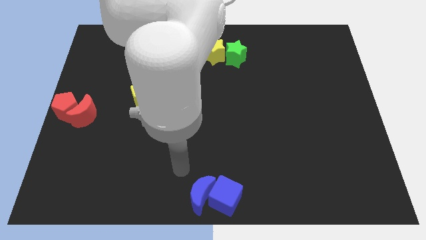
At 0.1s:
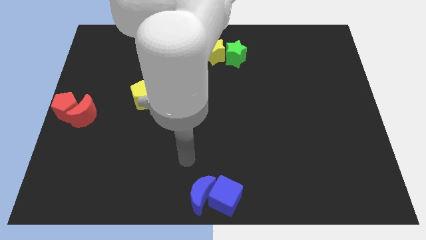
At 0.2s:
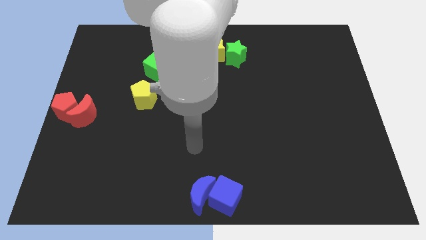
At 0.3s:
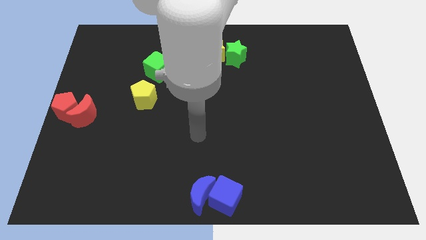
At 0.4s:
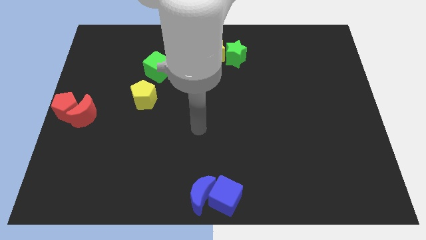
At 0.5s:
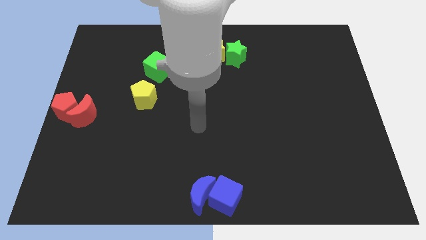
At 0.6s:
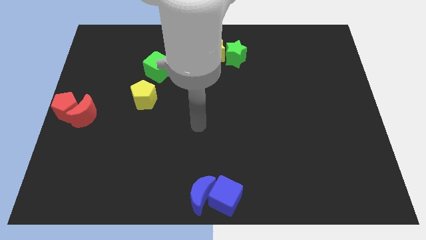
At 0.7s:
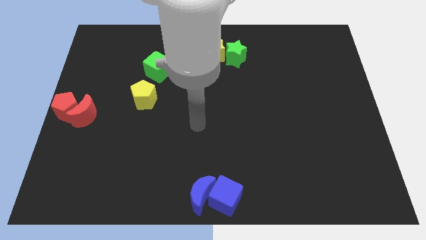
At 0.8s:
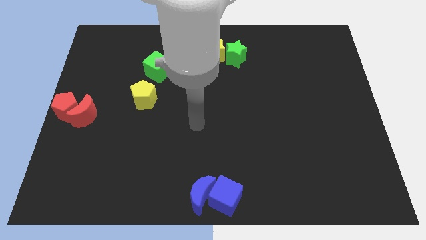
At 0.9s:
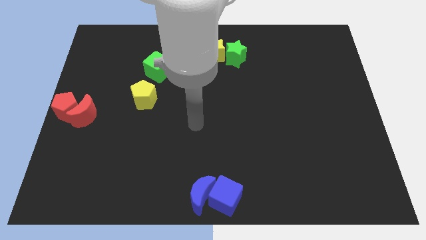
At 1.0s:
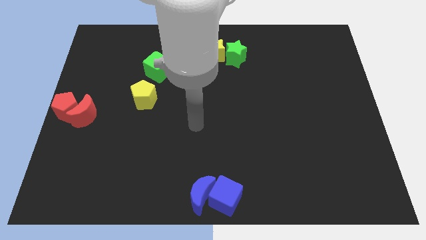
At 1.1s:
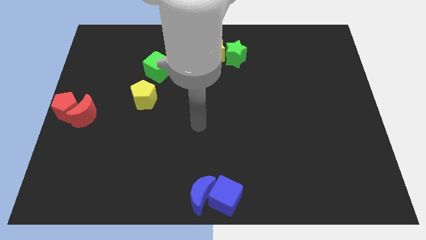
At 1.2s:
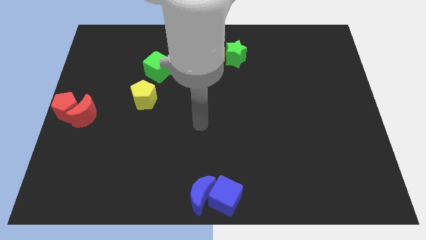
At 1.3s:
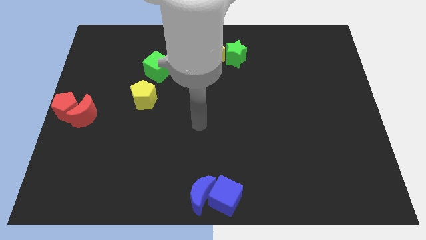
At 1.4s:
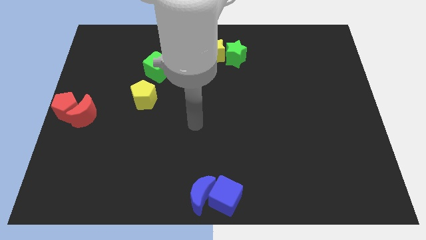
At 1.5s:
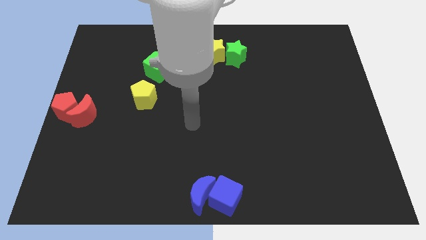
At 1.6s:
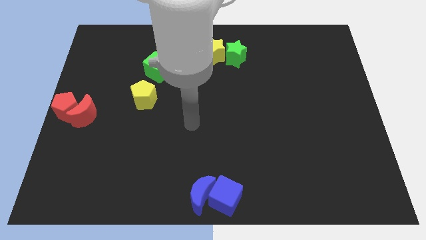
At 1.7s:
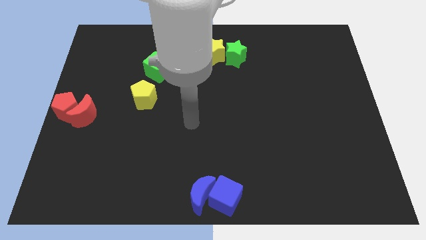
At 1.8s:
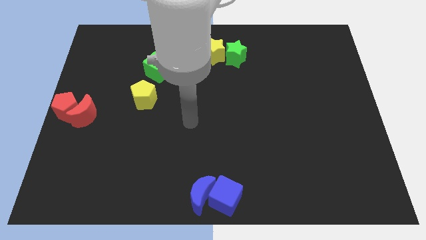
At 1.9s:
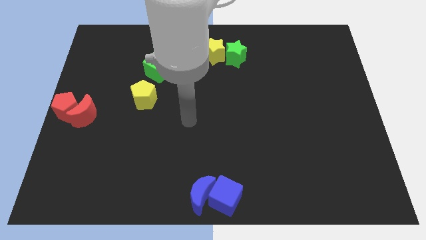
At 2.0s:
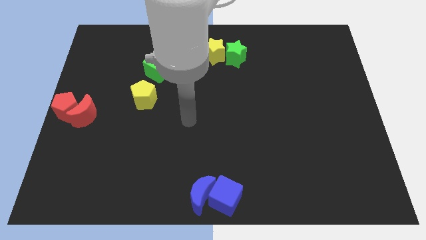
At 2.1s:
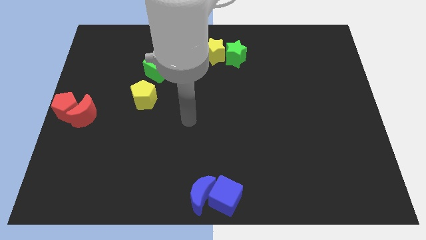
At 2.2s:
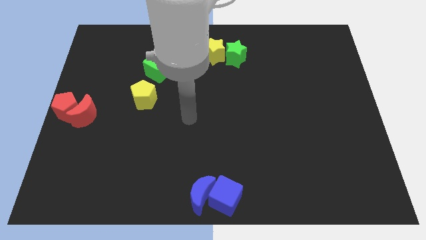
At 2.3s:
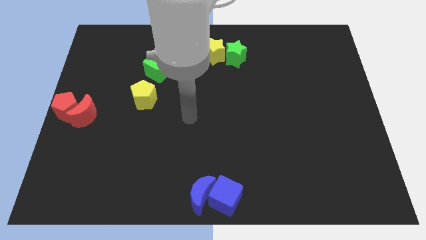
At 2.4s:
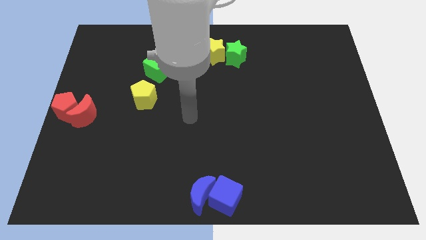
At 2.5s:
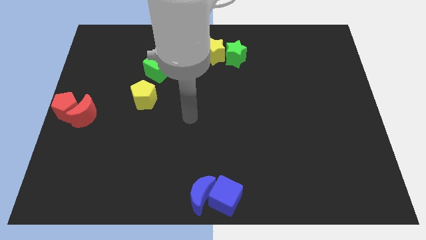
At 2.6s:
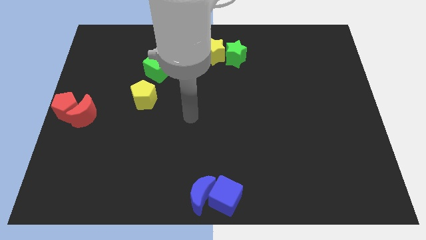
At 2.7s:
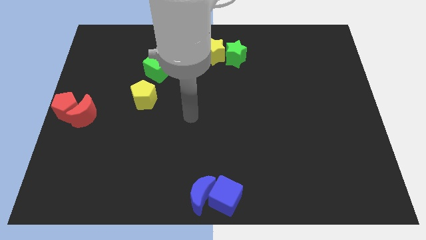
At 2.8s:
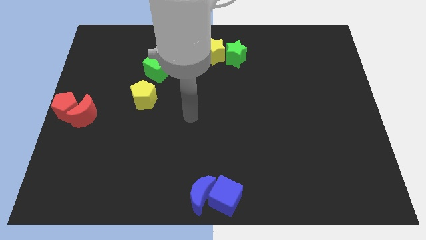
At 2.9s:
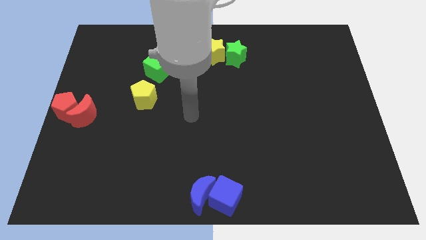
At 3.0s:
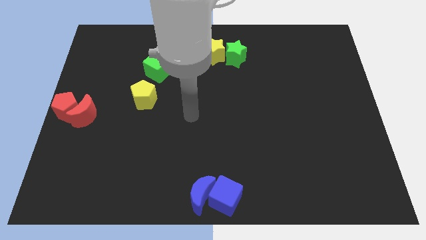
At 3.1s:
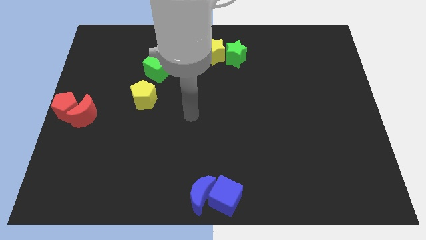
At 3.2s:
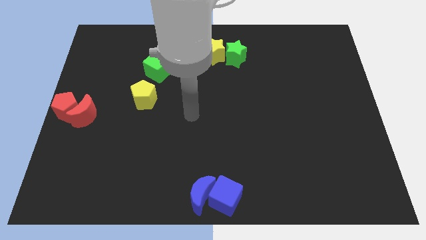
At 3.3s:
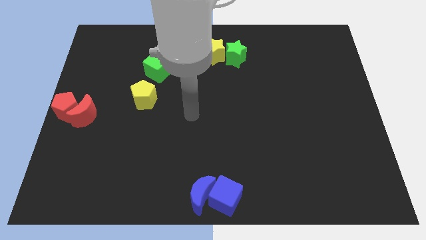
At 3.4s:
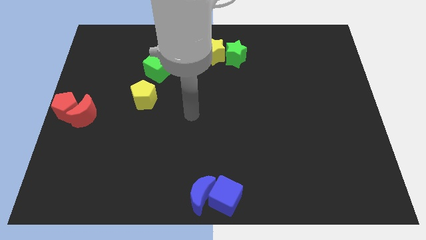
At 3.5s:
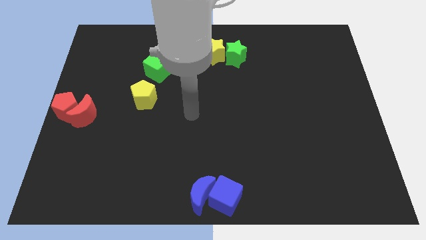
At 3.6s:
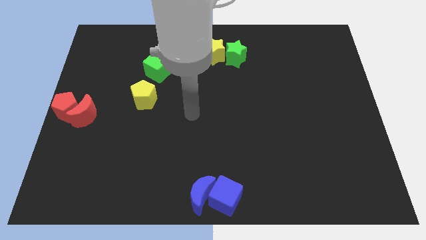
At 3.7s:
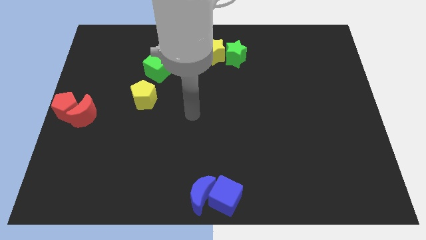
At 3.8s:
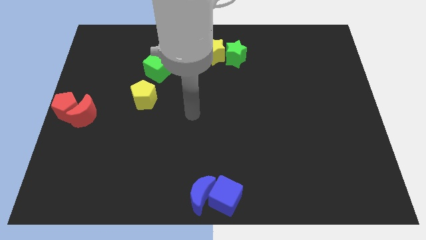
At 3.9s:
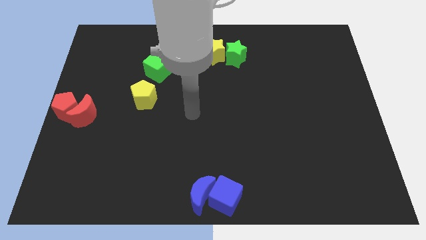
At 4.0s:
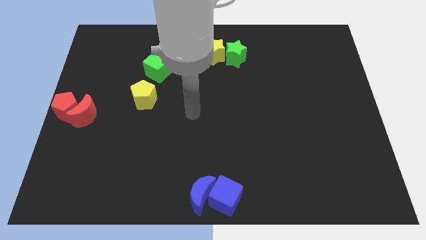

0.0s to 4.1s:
place your arm to the center of the board

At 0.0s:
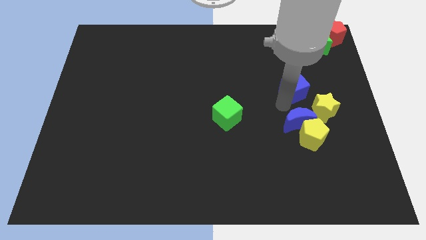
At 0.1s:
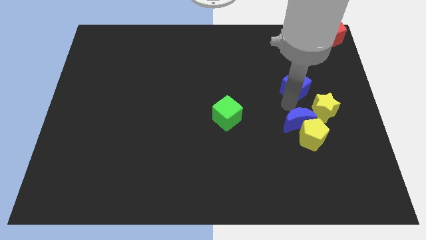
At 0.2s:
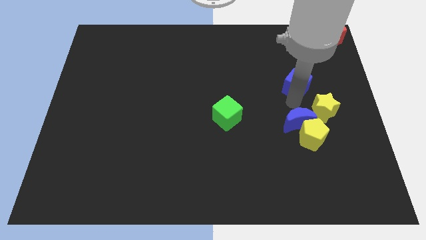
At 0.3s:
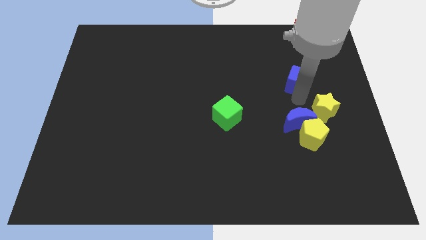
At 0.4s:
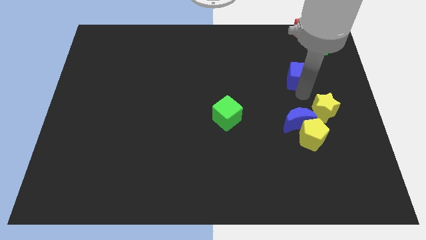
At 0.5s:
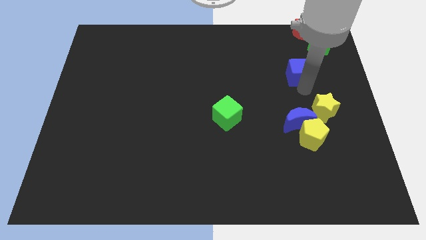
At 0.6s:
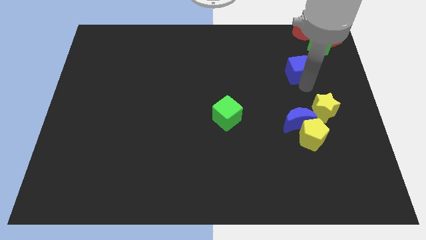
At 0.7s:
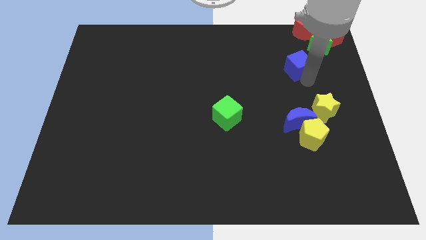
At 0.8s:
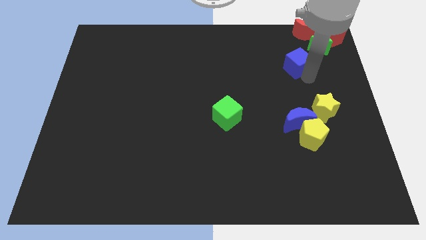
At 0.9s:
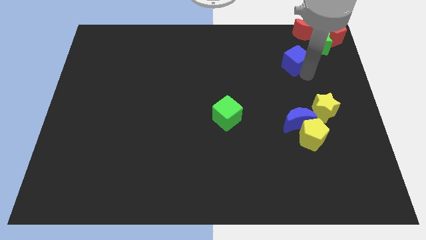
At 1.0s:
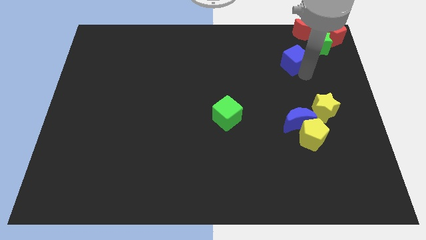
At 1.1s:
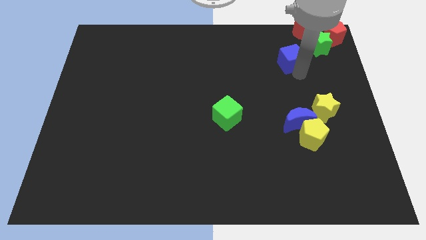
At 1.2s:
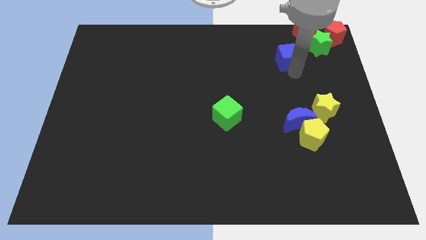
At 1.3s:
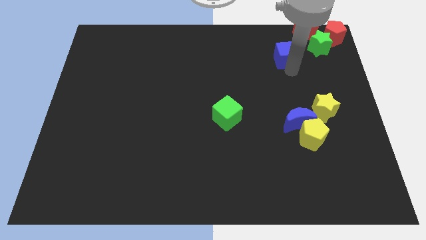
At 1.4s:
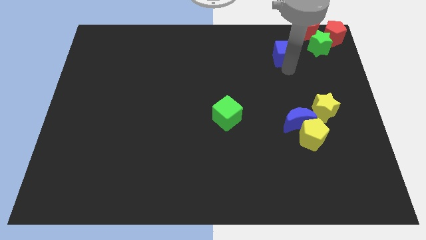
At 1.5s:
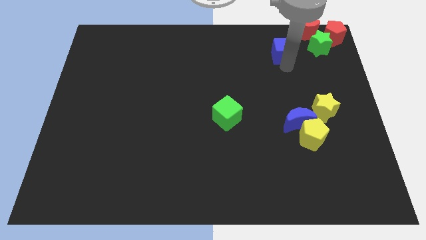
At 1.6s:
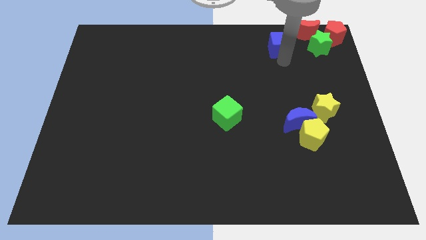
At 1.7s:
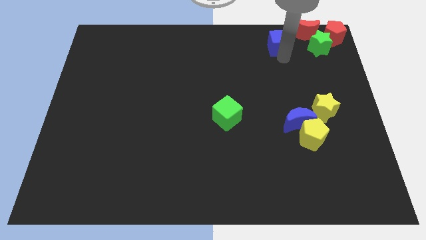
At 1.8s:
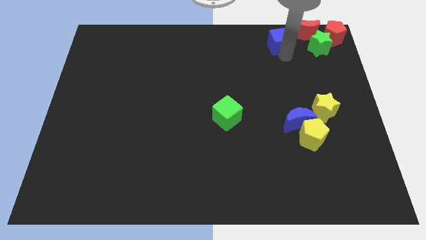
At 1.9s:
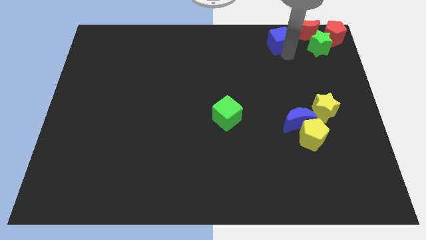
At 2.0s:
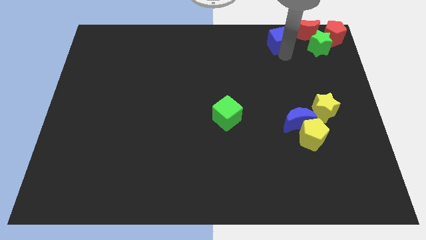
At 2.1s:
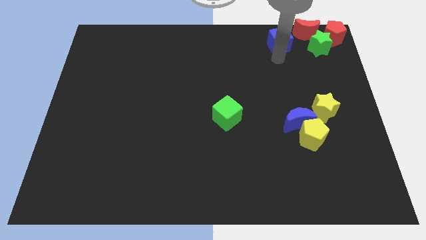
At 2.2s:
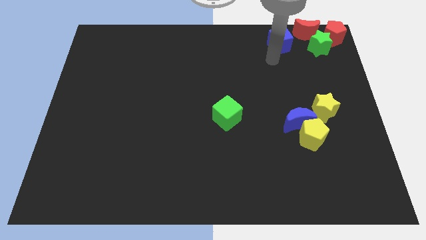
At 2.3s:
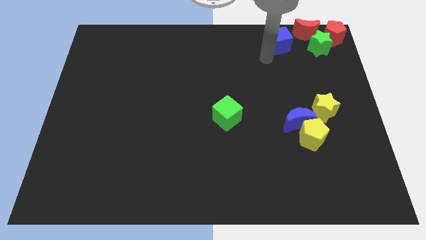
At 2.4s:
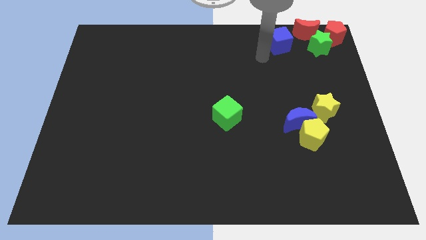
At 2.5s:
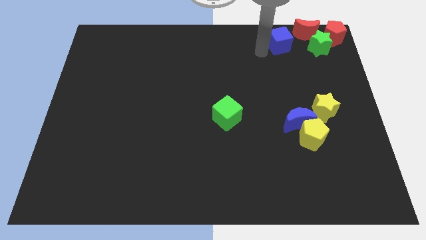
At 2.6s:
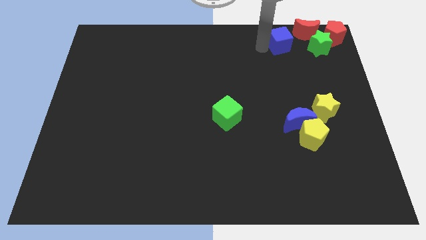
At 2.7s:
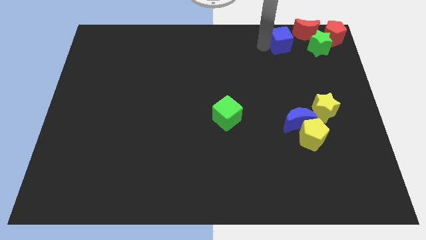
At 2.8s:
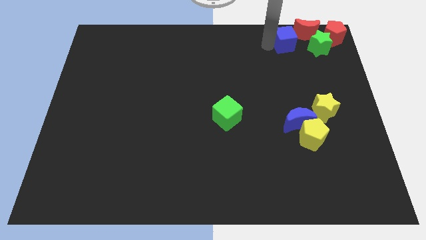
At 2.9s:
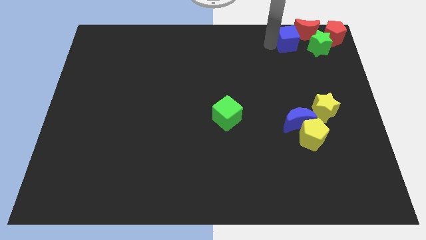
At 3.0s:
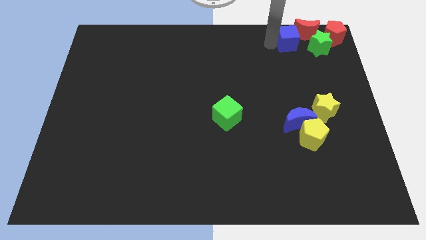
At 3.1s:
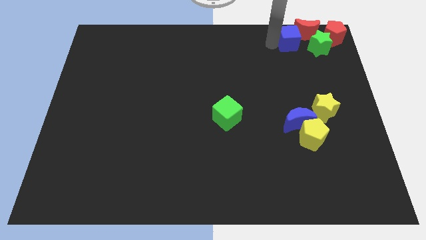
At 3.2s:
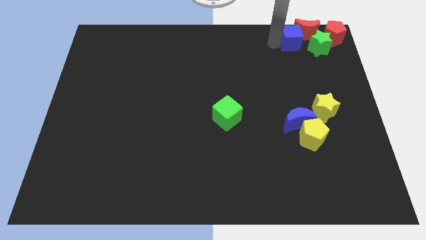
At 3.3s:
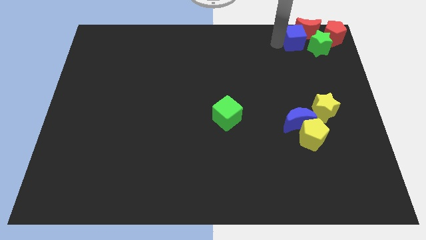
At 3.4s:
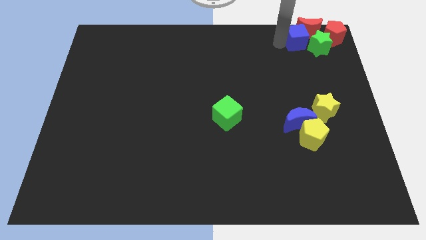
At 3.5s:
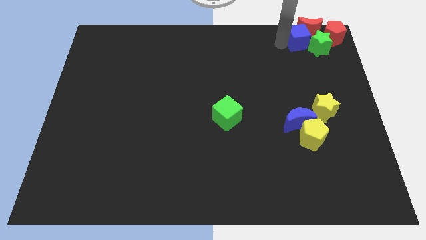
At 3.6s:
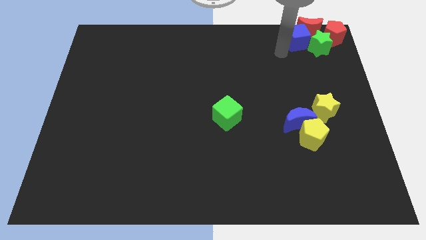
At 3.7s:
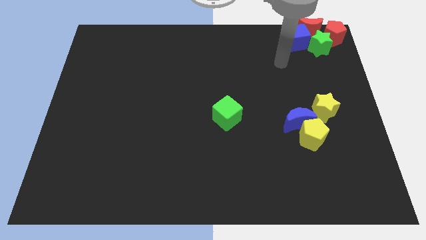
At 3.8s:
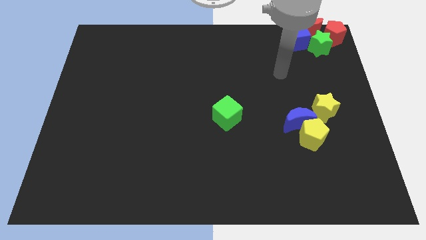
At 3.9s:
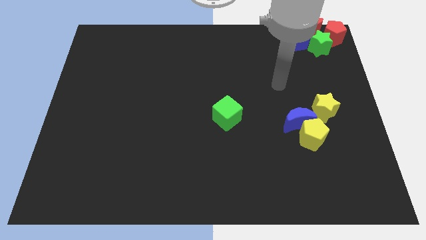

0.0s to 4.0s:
move the blue cube left to the red crescent

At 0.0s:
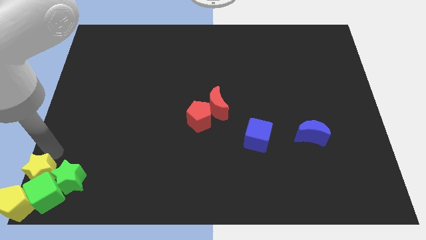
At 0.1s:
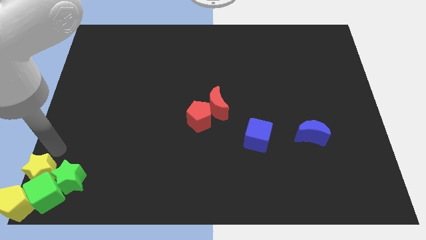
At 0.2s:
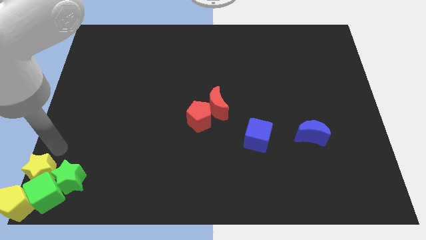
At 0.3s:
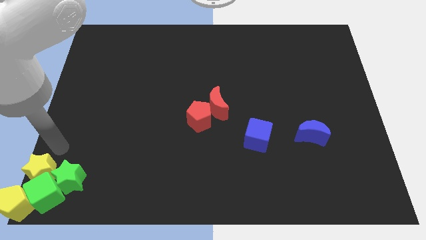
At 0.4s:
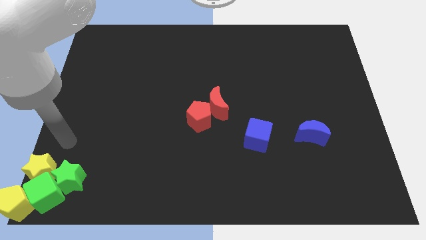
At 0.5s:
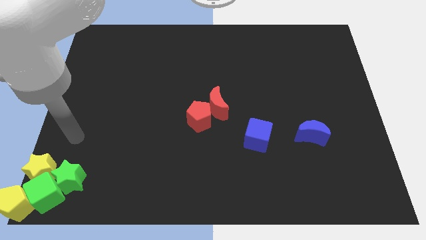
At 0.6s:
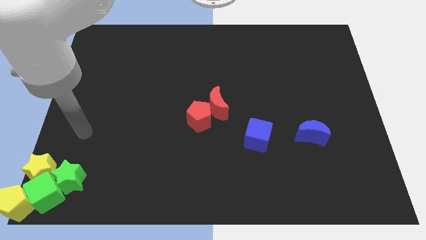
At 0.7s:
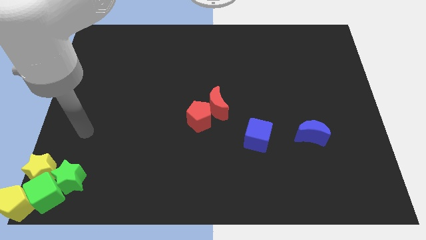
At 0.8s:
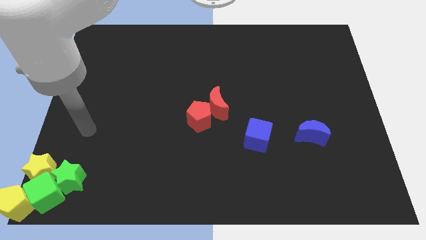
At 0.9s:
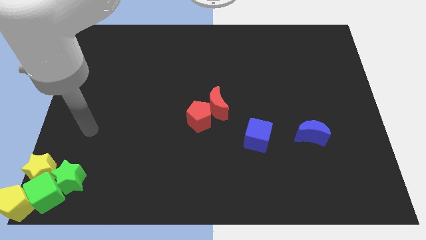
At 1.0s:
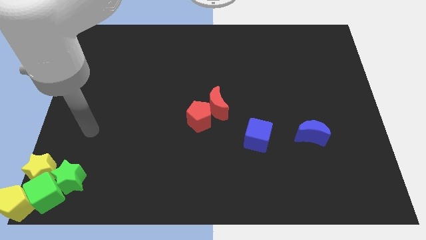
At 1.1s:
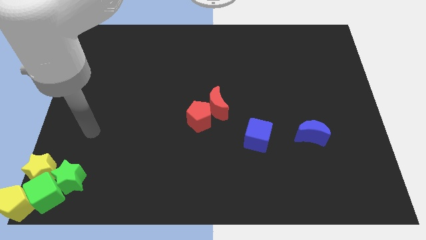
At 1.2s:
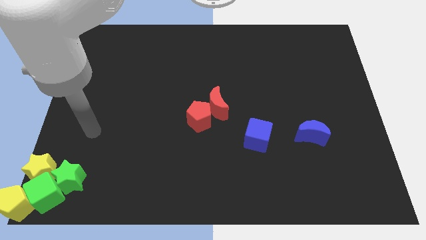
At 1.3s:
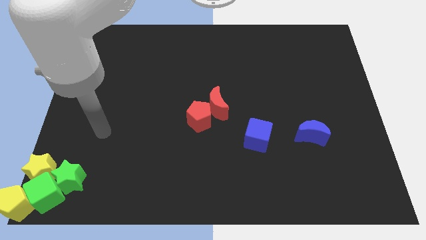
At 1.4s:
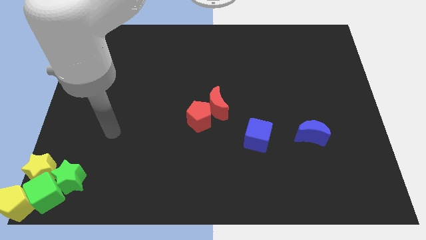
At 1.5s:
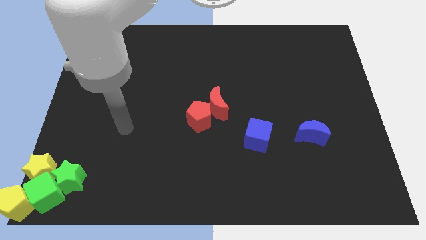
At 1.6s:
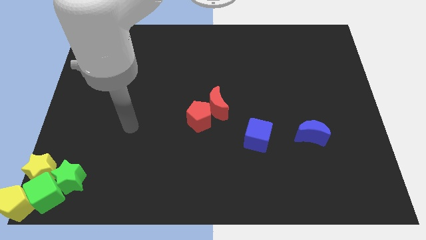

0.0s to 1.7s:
move your arm away from the yellow star
